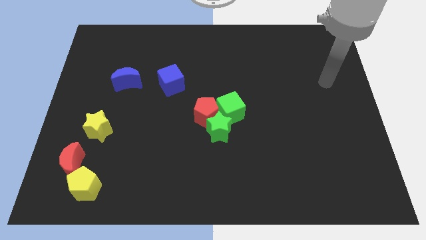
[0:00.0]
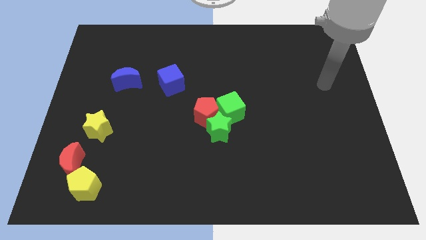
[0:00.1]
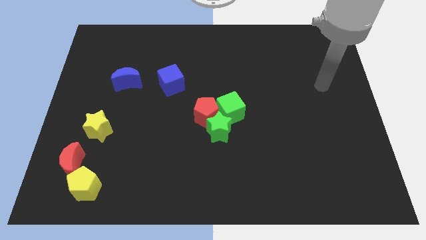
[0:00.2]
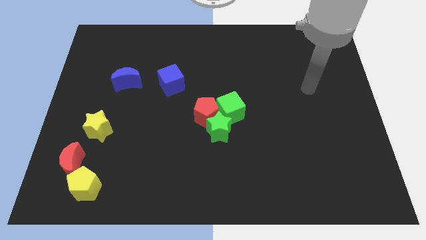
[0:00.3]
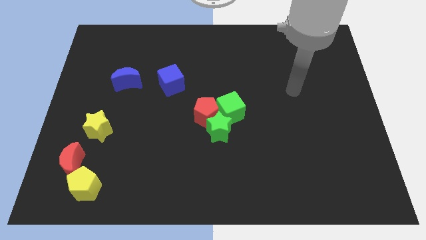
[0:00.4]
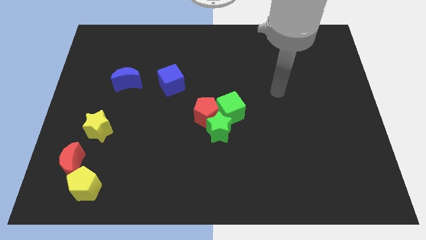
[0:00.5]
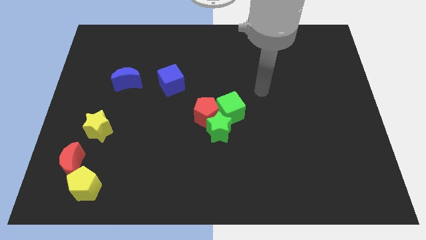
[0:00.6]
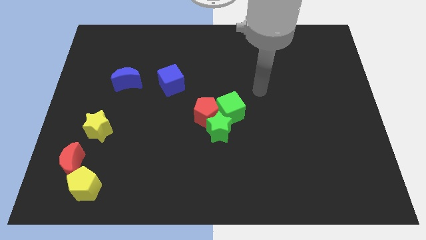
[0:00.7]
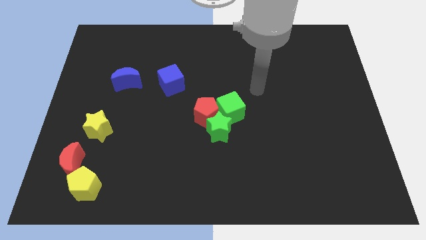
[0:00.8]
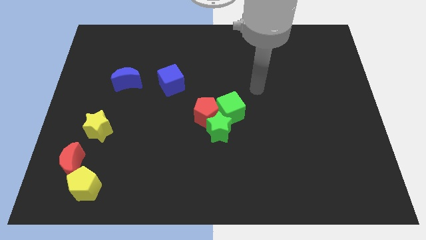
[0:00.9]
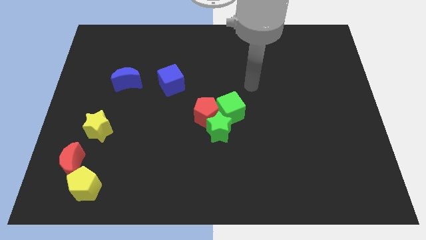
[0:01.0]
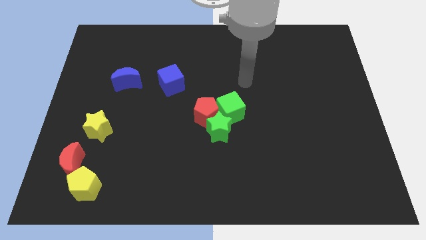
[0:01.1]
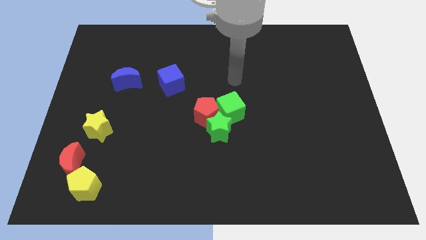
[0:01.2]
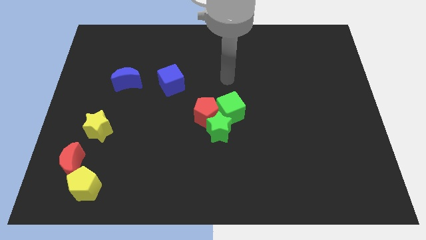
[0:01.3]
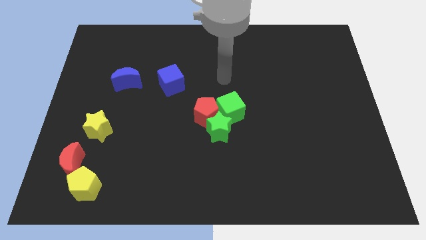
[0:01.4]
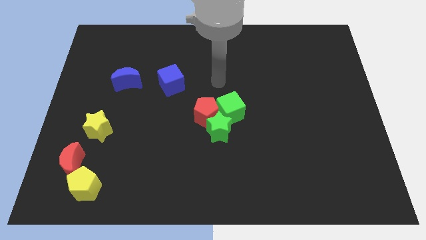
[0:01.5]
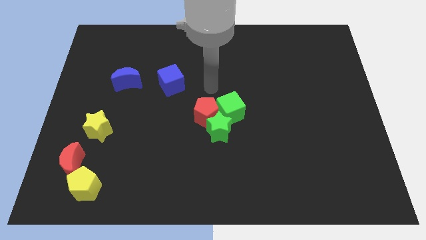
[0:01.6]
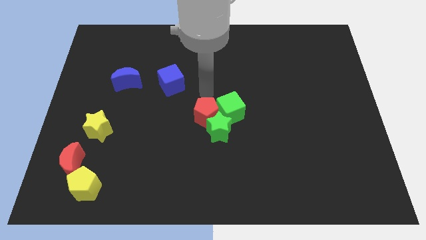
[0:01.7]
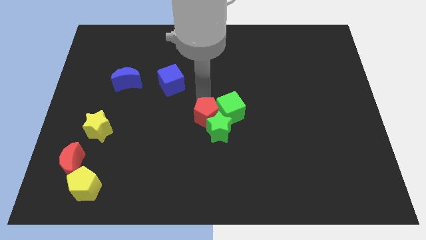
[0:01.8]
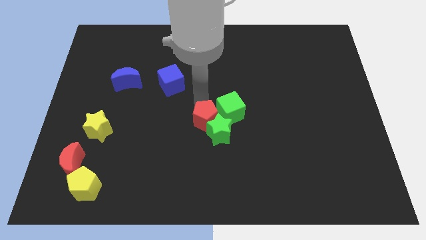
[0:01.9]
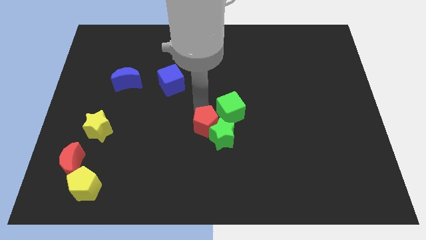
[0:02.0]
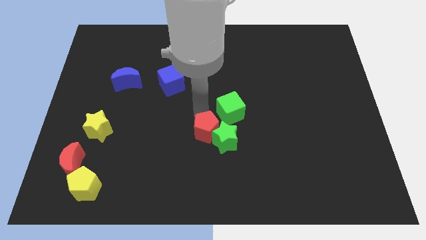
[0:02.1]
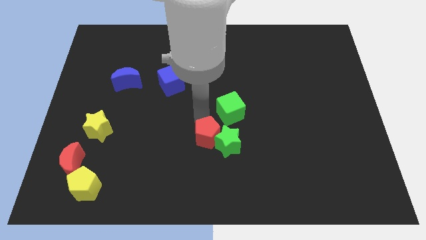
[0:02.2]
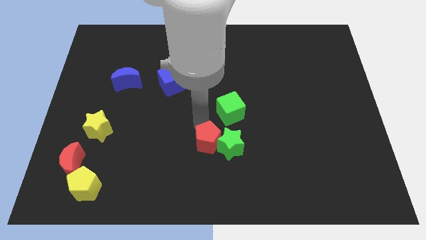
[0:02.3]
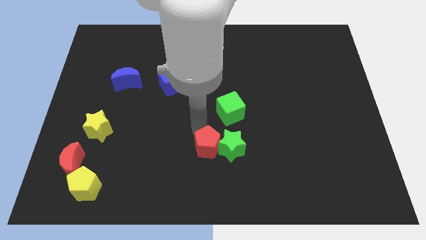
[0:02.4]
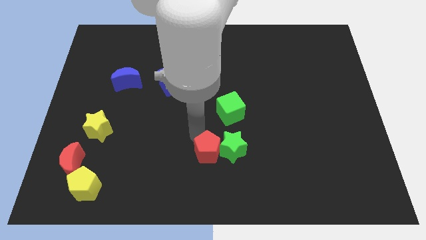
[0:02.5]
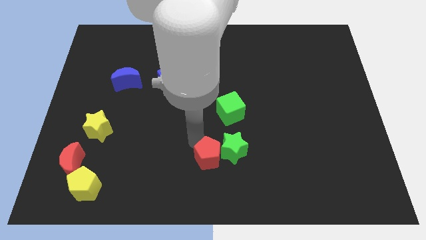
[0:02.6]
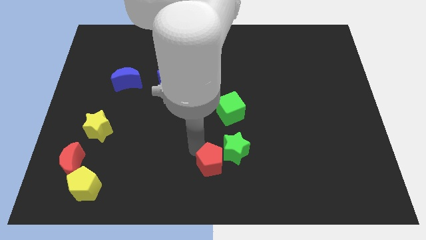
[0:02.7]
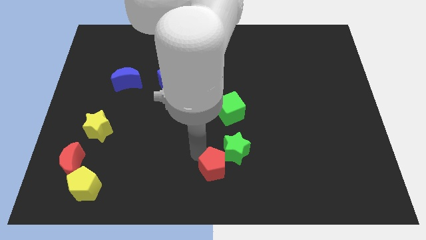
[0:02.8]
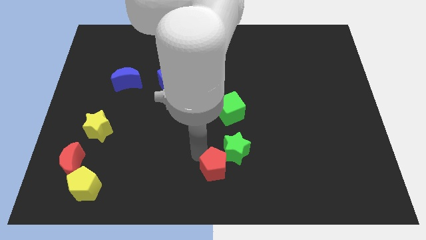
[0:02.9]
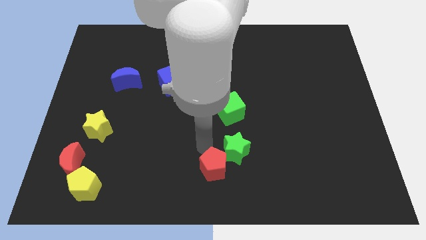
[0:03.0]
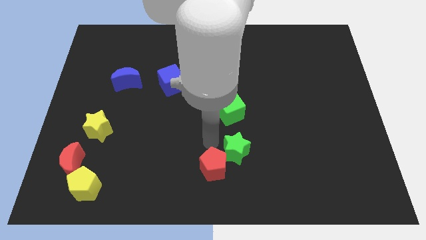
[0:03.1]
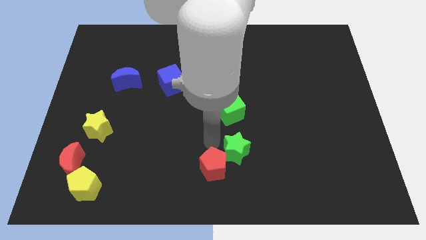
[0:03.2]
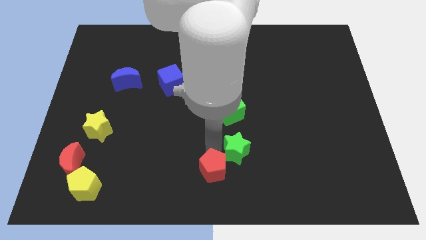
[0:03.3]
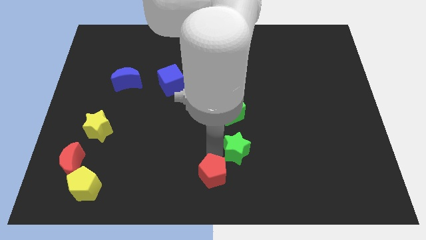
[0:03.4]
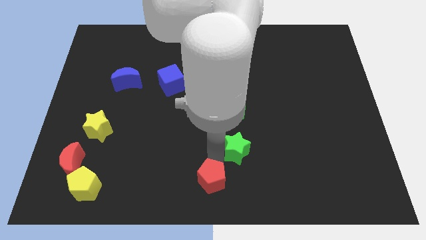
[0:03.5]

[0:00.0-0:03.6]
separate the red pentagon from the green star

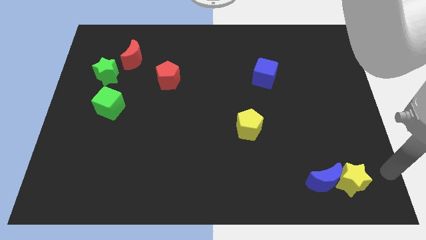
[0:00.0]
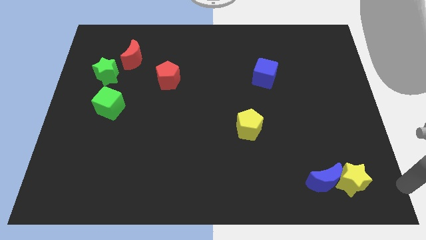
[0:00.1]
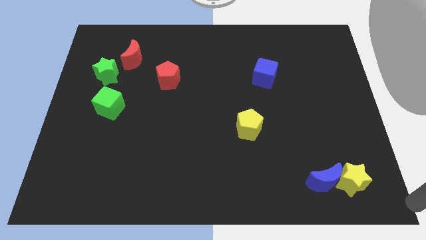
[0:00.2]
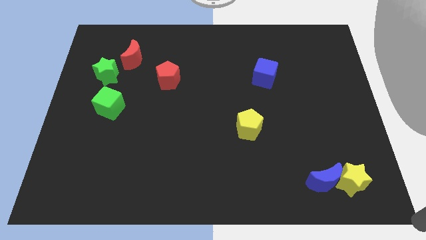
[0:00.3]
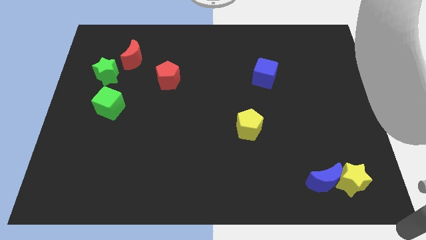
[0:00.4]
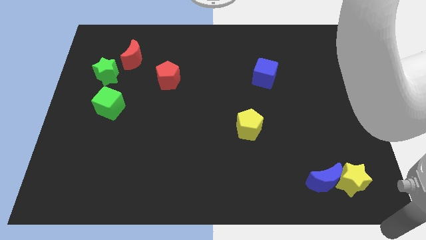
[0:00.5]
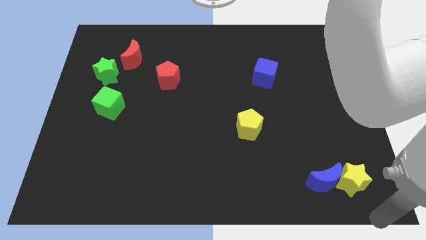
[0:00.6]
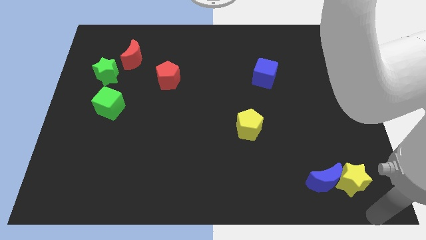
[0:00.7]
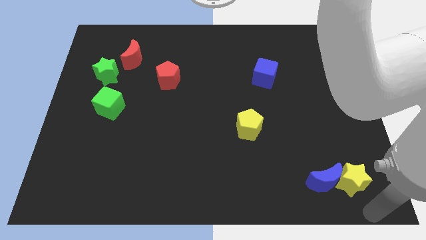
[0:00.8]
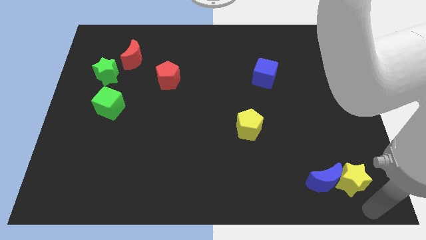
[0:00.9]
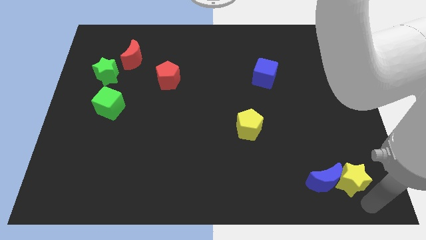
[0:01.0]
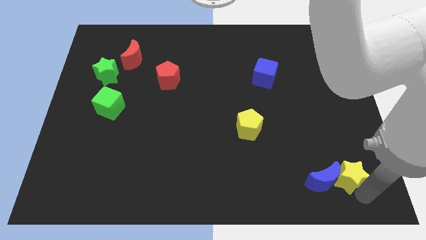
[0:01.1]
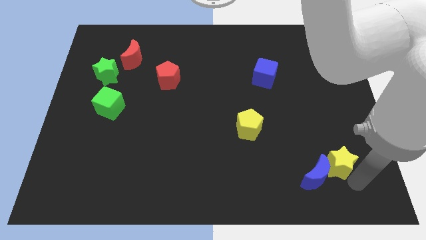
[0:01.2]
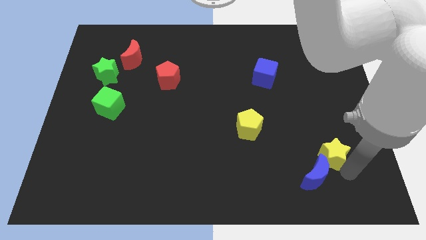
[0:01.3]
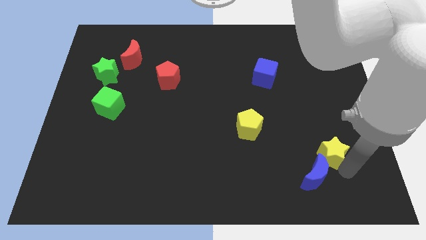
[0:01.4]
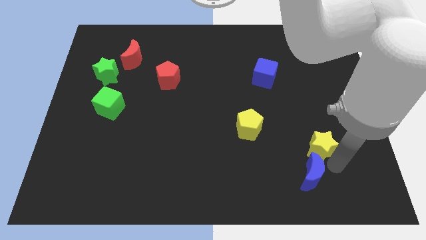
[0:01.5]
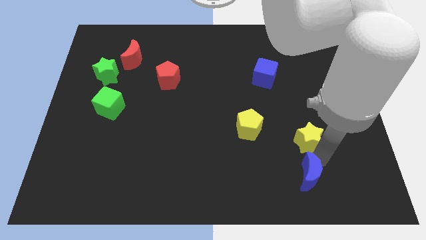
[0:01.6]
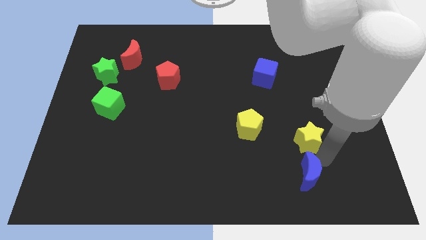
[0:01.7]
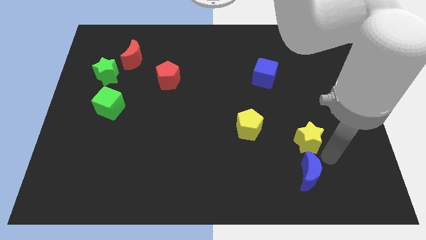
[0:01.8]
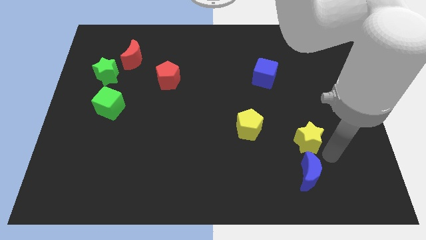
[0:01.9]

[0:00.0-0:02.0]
push the yellow star on top of blue crescent

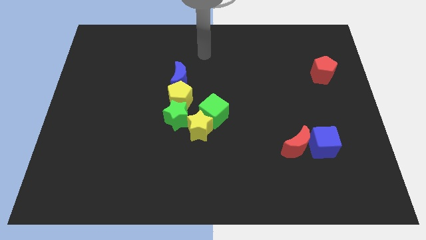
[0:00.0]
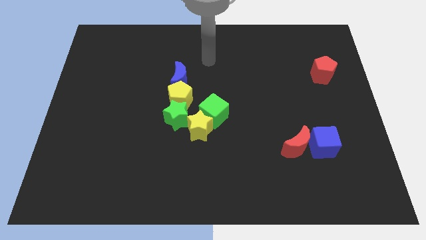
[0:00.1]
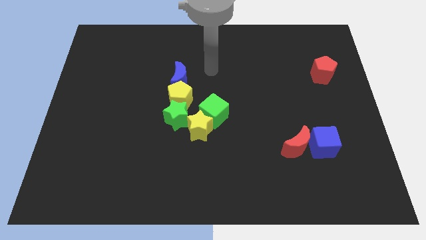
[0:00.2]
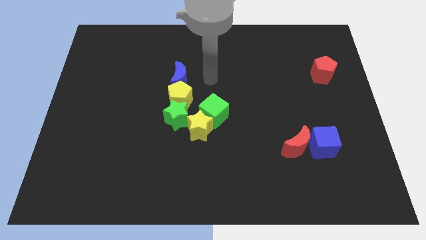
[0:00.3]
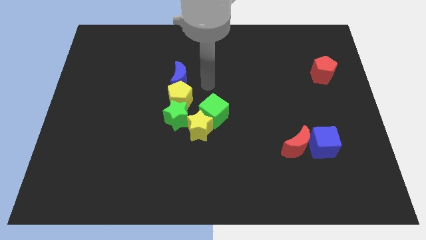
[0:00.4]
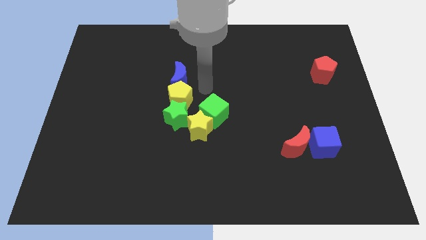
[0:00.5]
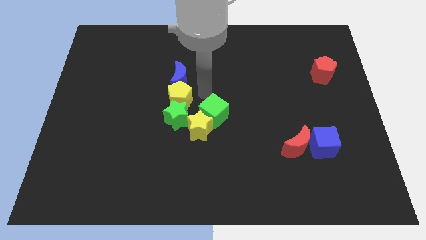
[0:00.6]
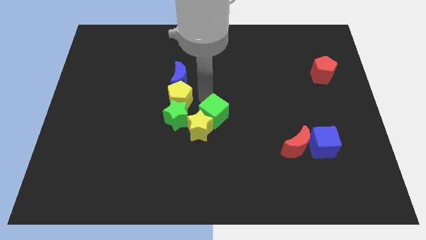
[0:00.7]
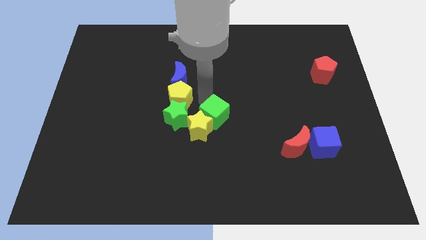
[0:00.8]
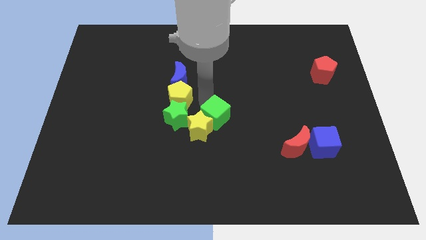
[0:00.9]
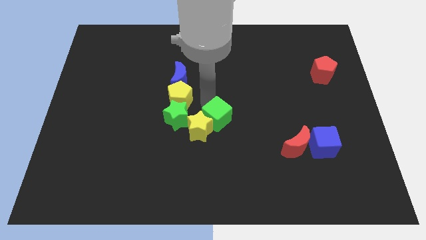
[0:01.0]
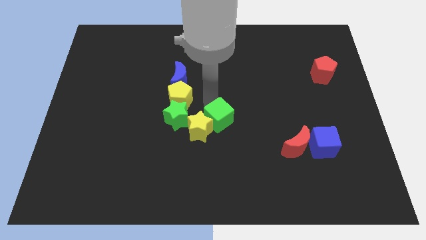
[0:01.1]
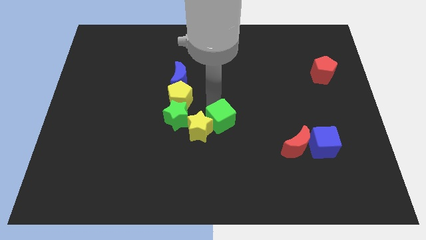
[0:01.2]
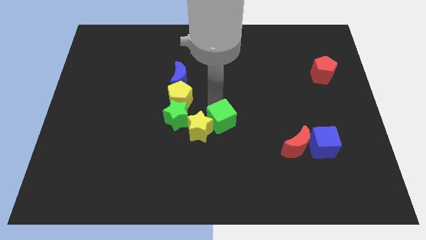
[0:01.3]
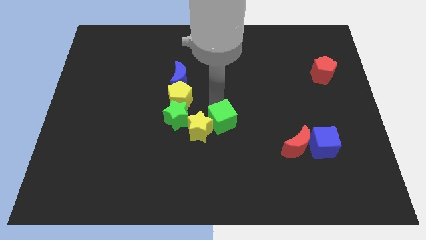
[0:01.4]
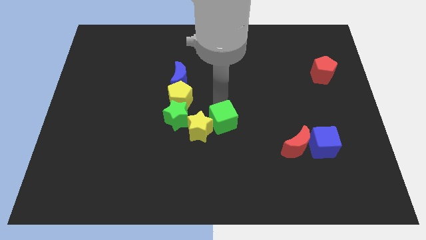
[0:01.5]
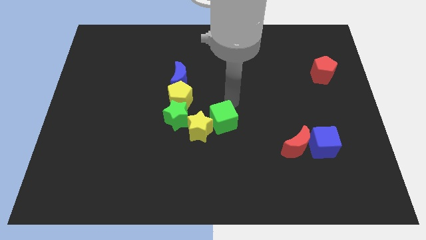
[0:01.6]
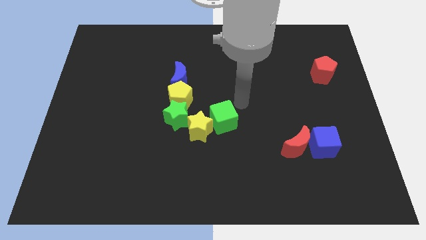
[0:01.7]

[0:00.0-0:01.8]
push the green cube slightly down

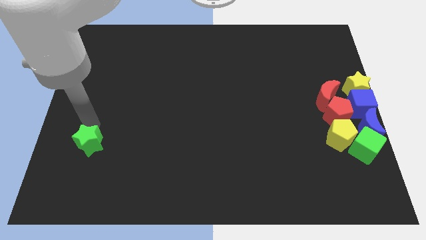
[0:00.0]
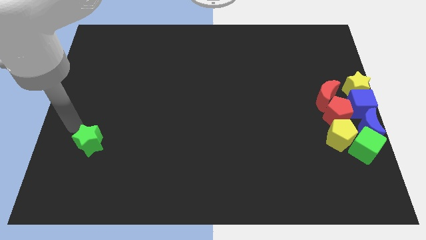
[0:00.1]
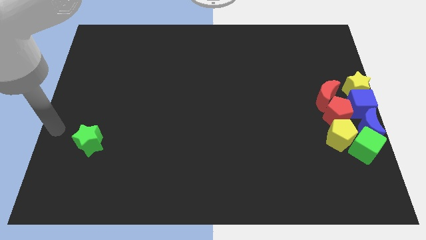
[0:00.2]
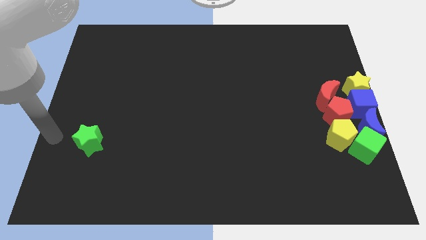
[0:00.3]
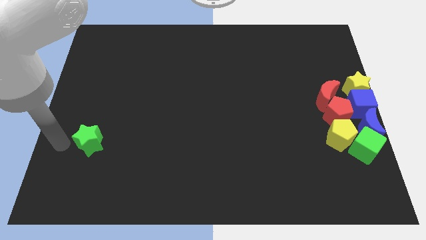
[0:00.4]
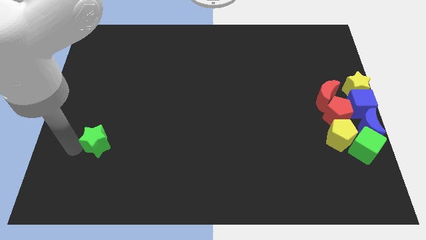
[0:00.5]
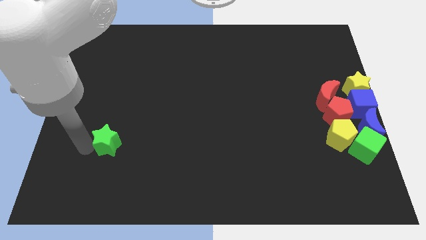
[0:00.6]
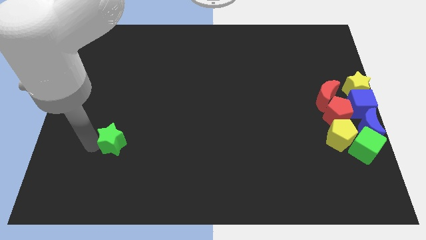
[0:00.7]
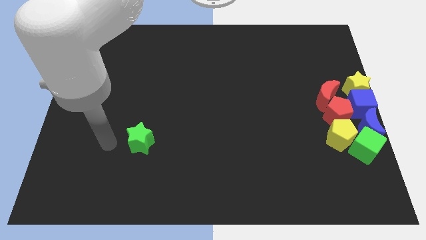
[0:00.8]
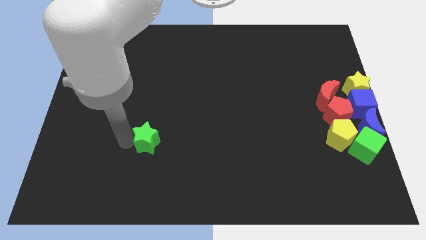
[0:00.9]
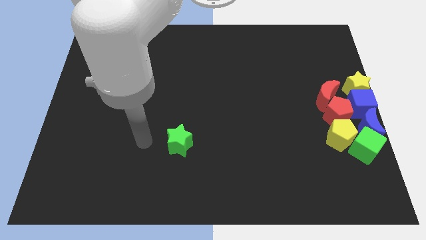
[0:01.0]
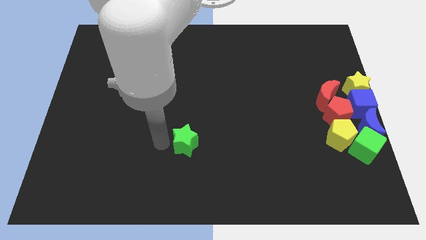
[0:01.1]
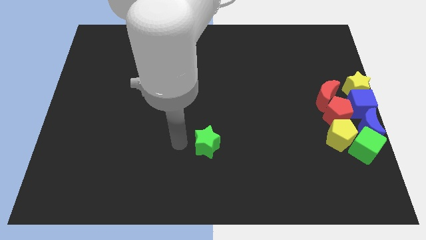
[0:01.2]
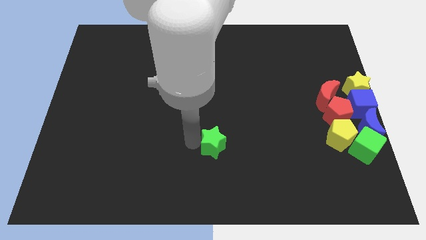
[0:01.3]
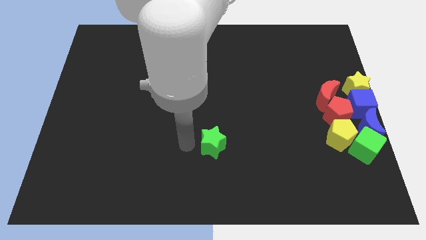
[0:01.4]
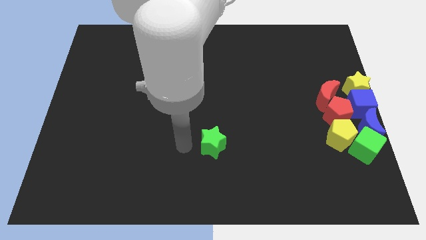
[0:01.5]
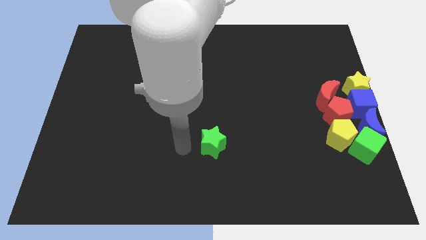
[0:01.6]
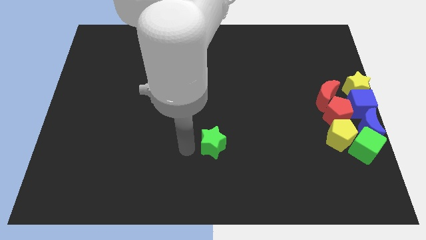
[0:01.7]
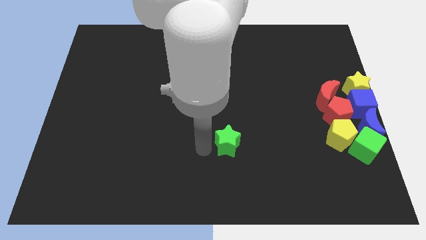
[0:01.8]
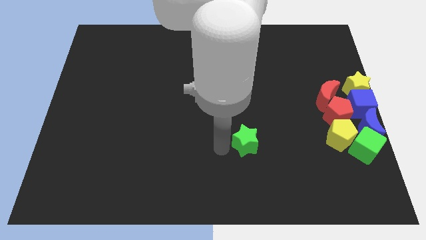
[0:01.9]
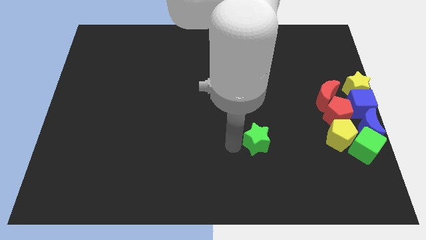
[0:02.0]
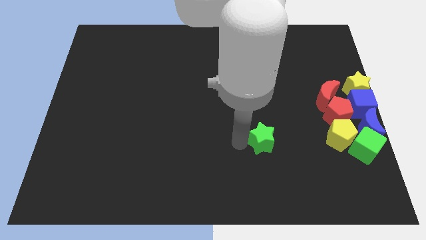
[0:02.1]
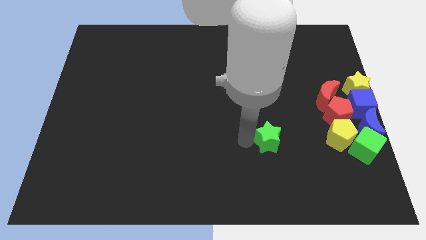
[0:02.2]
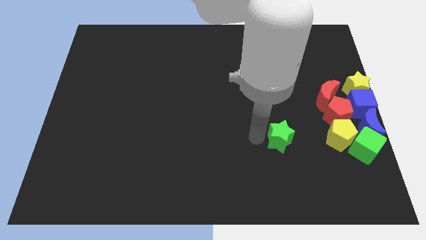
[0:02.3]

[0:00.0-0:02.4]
move the green star parallel to the left of yellow pentagon
